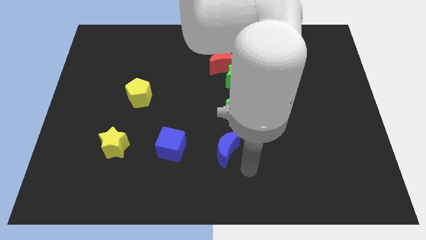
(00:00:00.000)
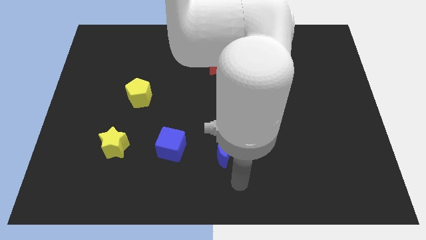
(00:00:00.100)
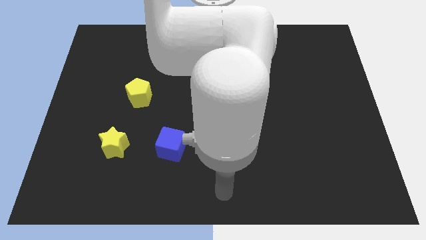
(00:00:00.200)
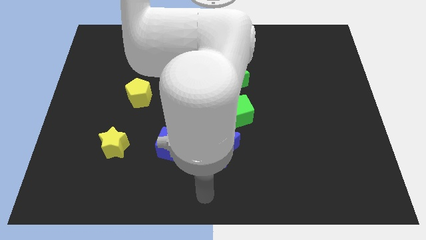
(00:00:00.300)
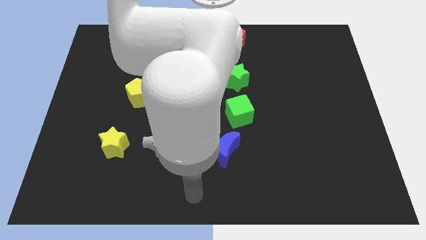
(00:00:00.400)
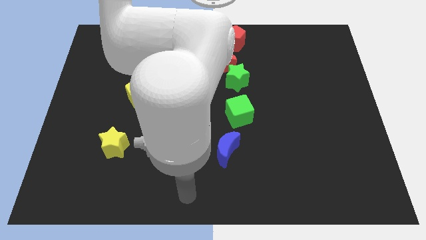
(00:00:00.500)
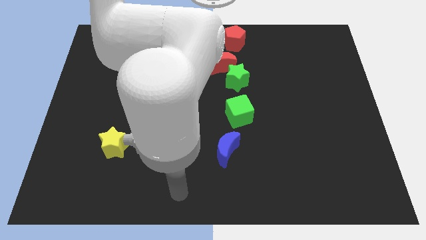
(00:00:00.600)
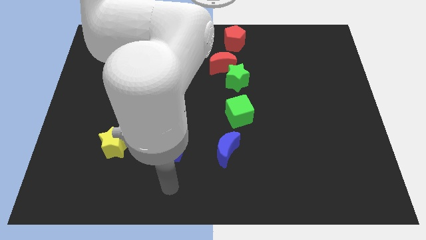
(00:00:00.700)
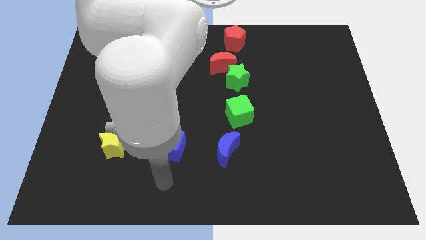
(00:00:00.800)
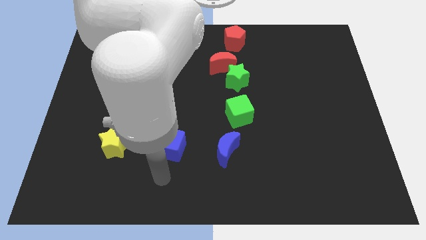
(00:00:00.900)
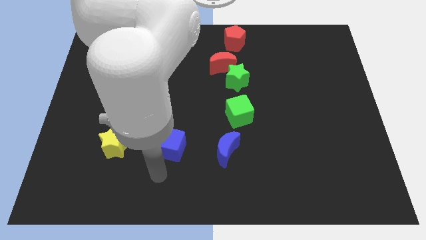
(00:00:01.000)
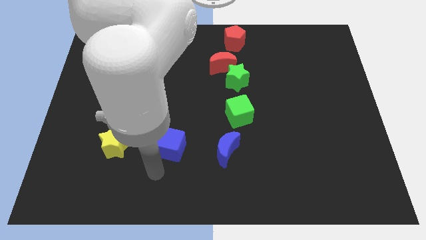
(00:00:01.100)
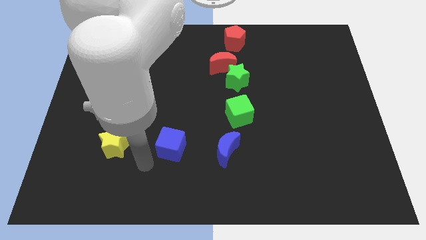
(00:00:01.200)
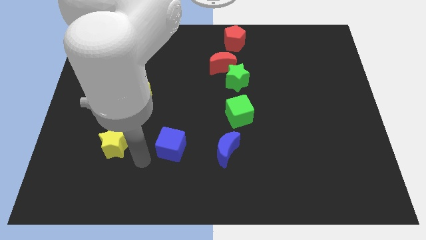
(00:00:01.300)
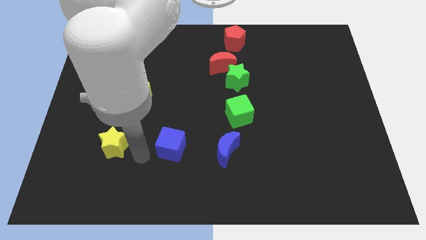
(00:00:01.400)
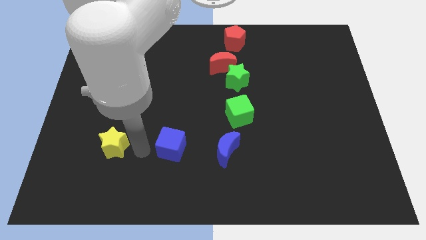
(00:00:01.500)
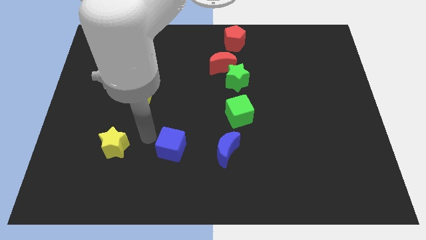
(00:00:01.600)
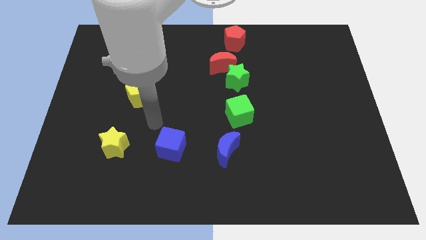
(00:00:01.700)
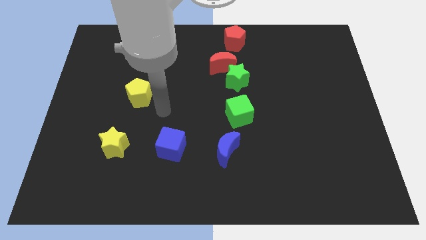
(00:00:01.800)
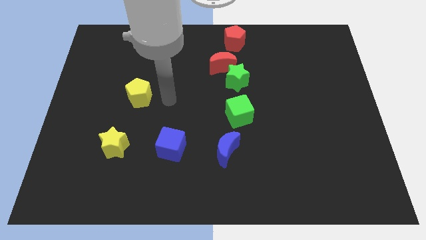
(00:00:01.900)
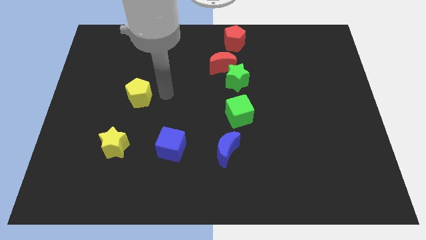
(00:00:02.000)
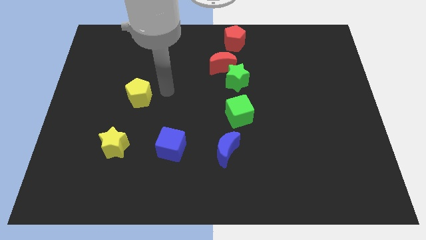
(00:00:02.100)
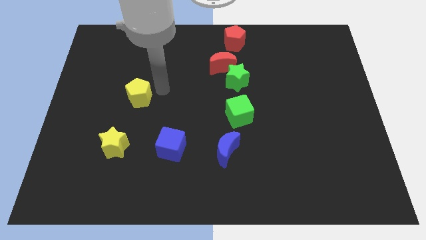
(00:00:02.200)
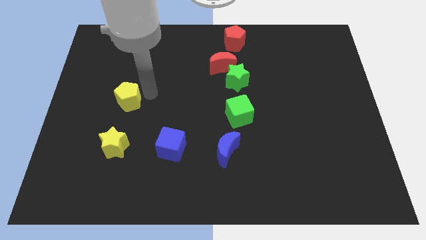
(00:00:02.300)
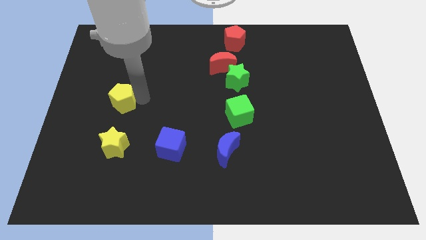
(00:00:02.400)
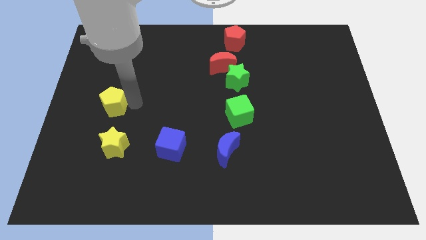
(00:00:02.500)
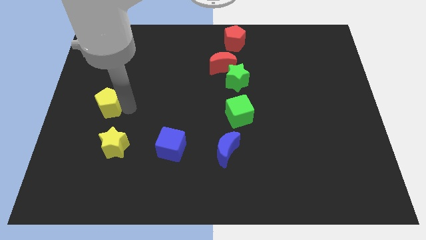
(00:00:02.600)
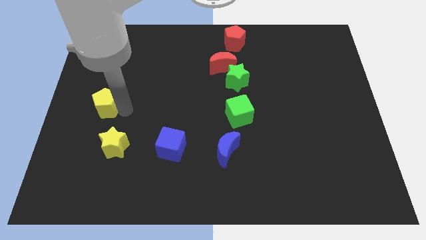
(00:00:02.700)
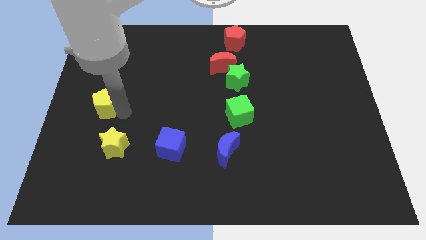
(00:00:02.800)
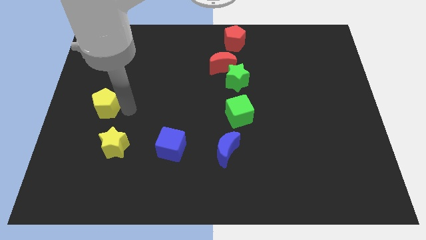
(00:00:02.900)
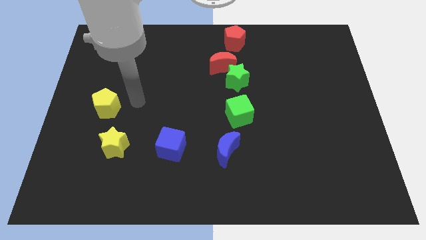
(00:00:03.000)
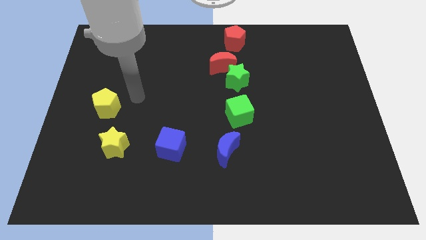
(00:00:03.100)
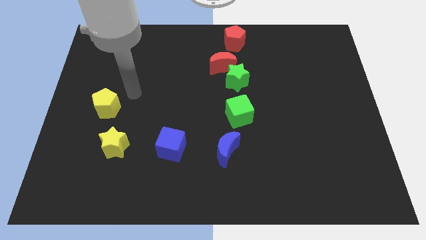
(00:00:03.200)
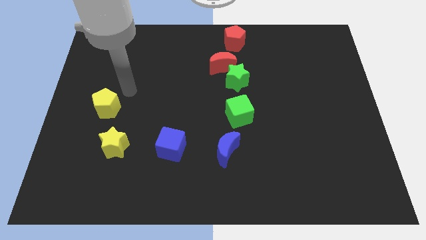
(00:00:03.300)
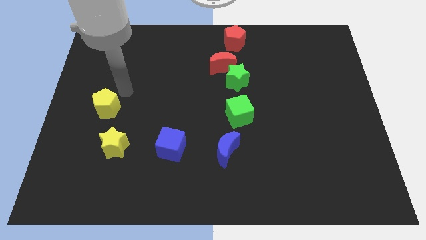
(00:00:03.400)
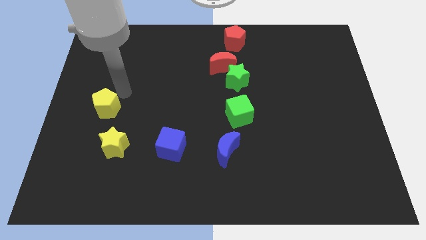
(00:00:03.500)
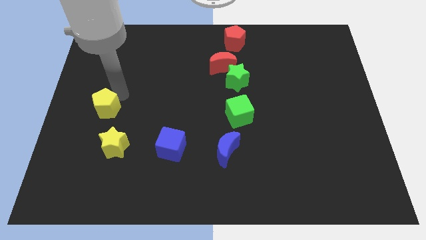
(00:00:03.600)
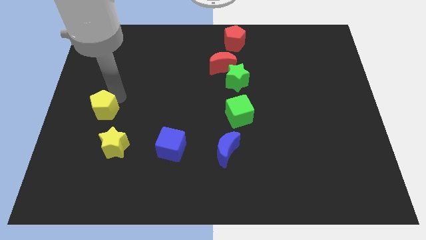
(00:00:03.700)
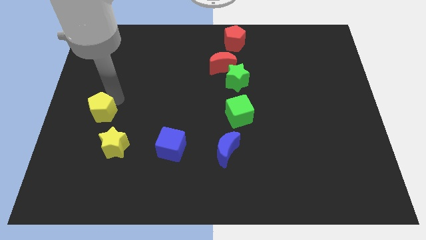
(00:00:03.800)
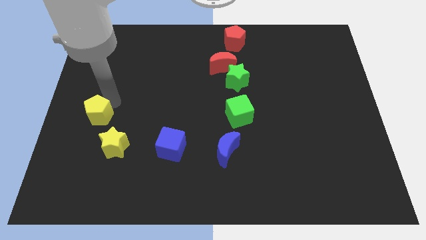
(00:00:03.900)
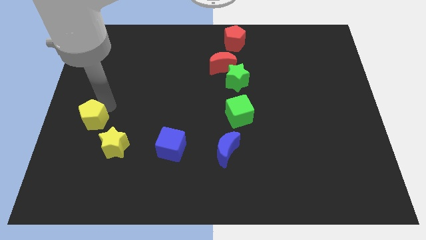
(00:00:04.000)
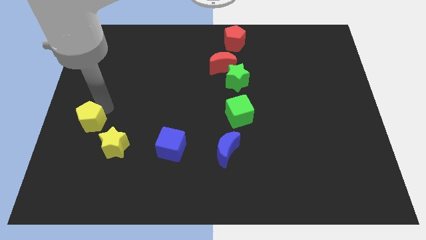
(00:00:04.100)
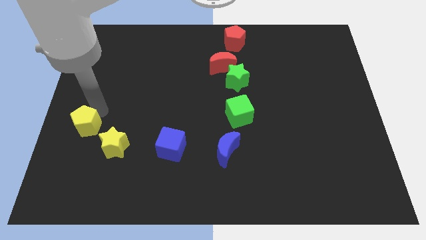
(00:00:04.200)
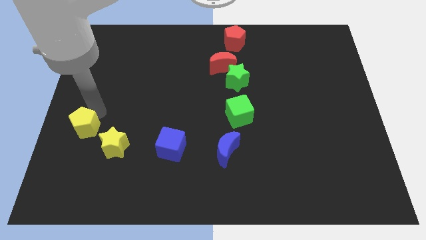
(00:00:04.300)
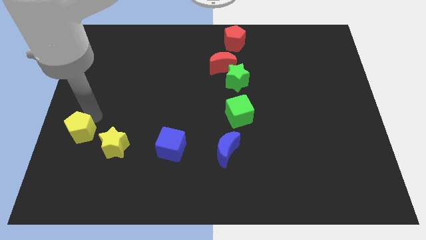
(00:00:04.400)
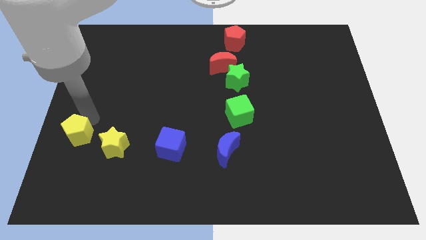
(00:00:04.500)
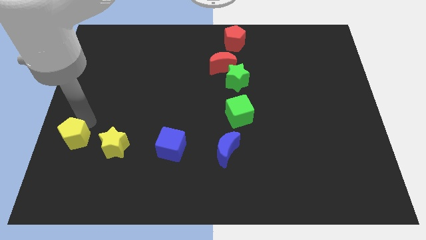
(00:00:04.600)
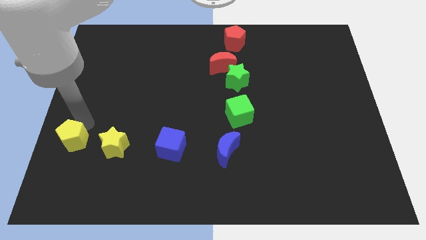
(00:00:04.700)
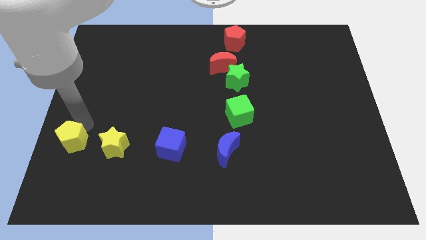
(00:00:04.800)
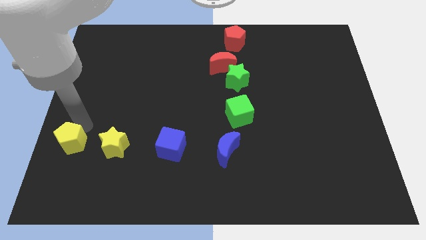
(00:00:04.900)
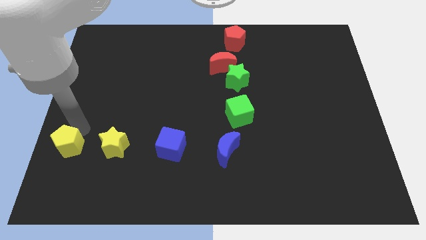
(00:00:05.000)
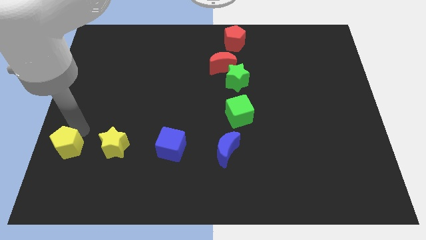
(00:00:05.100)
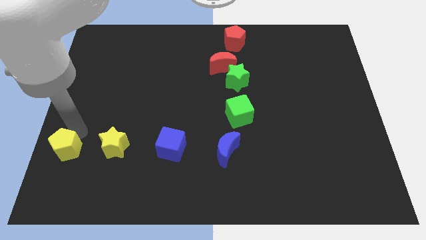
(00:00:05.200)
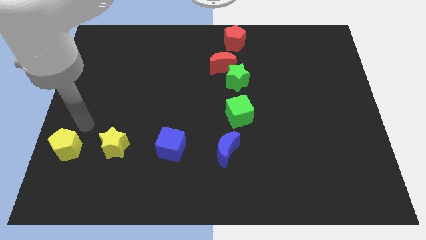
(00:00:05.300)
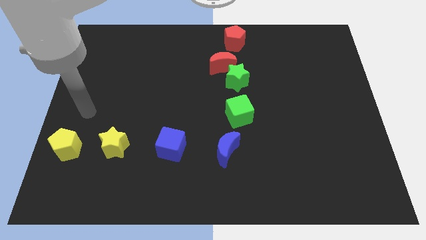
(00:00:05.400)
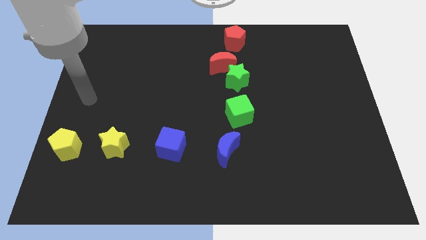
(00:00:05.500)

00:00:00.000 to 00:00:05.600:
push the yellow pentagon to the left side of the yellow star

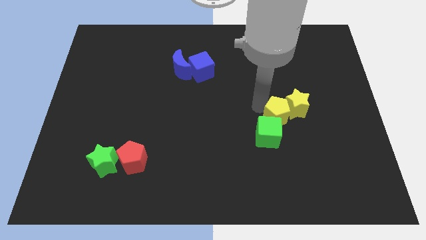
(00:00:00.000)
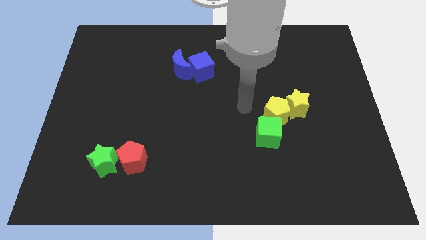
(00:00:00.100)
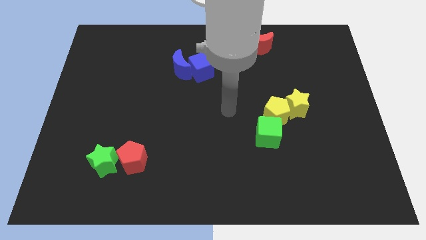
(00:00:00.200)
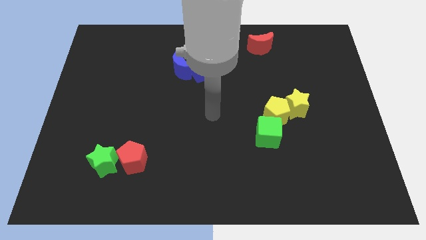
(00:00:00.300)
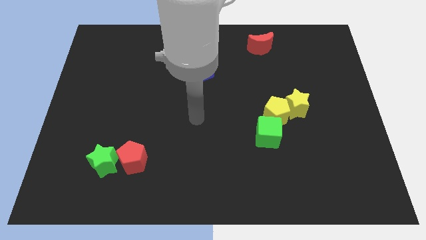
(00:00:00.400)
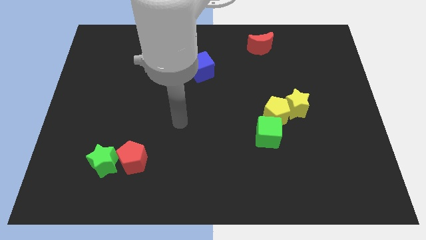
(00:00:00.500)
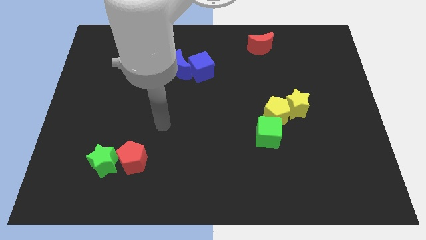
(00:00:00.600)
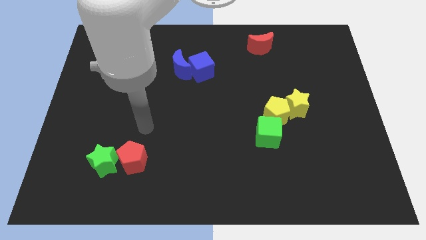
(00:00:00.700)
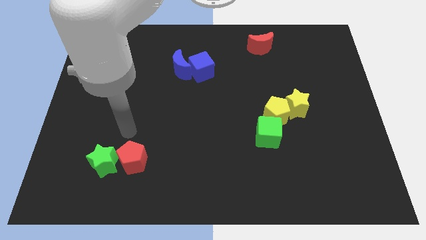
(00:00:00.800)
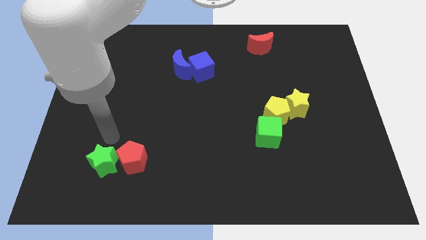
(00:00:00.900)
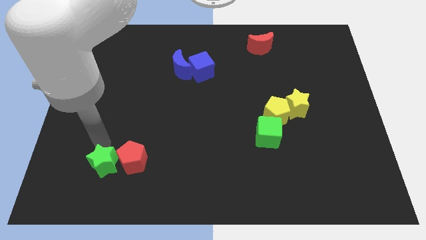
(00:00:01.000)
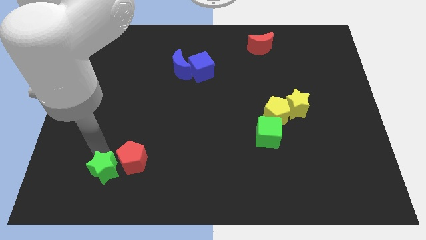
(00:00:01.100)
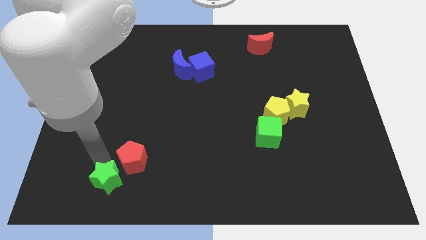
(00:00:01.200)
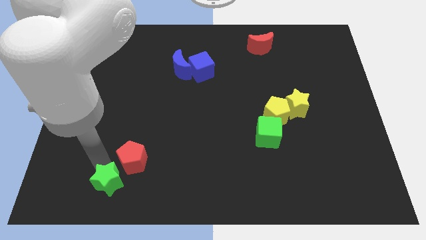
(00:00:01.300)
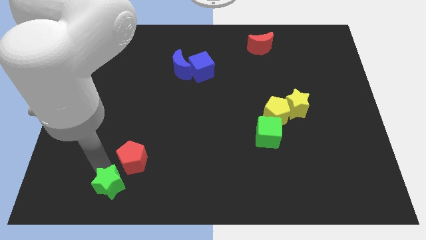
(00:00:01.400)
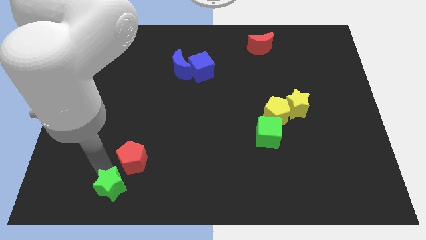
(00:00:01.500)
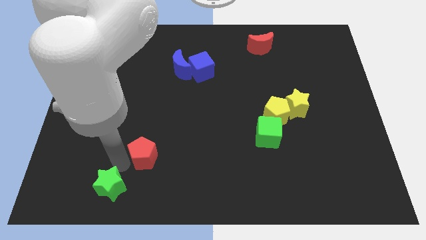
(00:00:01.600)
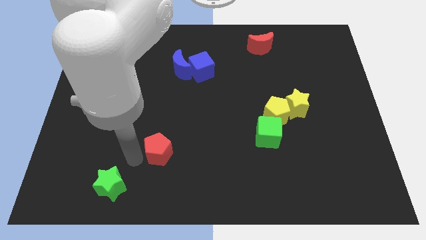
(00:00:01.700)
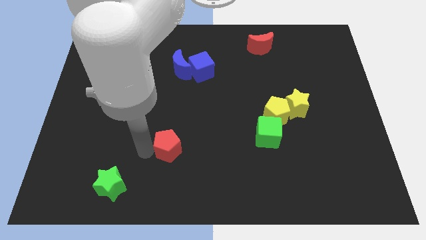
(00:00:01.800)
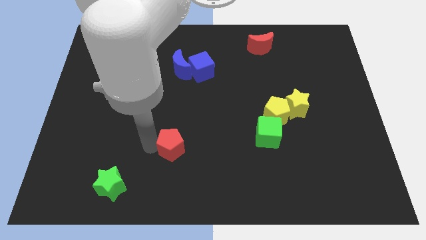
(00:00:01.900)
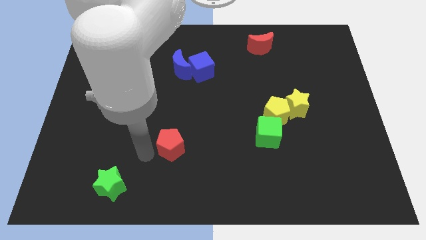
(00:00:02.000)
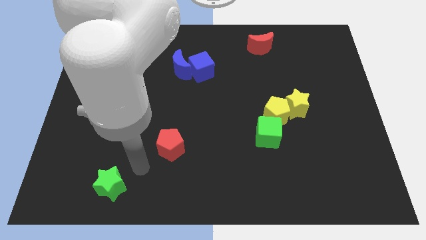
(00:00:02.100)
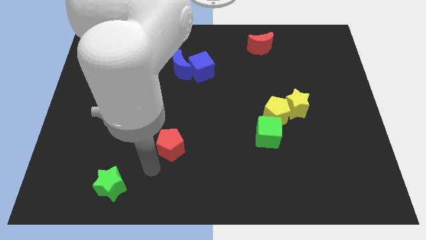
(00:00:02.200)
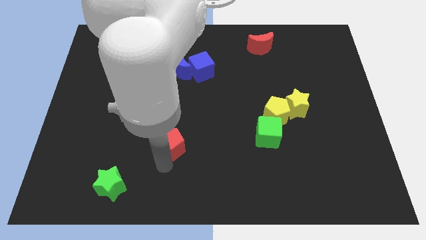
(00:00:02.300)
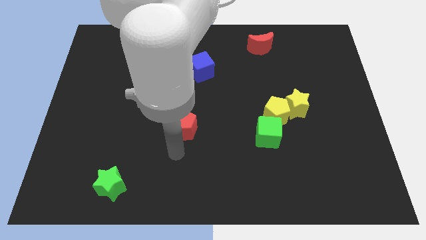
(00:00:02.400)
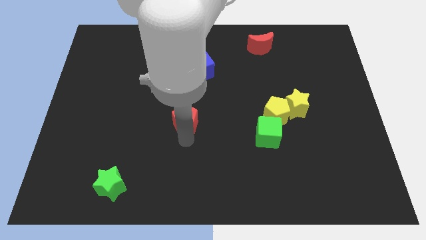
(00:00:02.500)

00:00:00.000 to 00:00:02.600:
separate the red pentagon from the green star

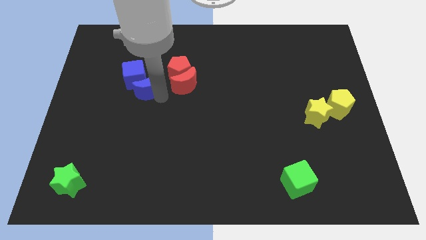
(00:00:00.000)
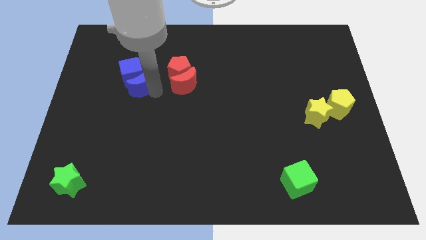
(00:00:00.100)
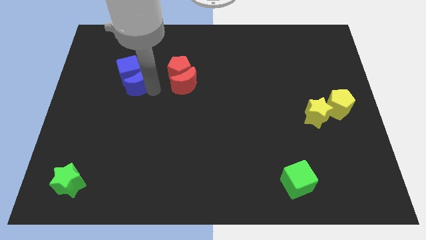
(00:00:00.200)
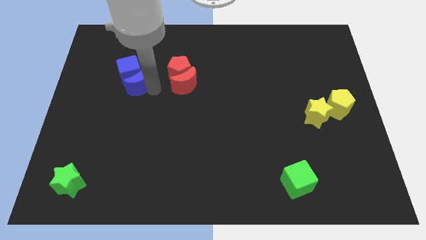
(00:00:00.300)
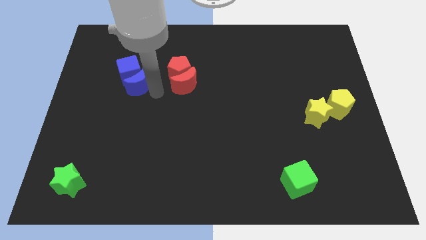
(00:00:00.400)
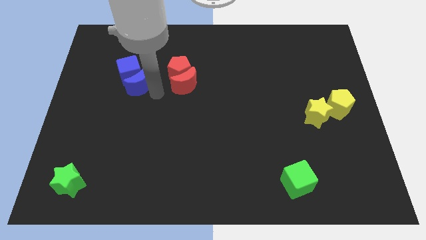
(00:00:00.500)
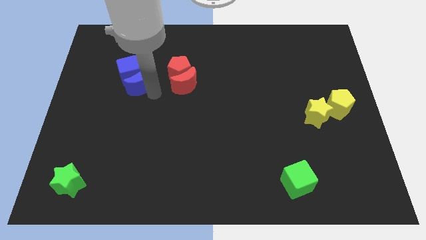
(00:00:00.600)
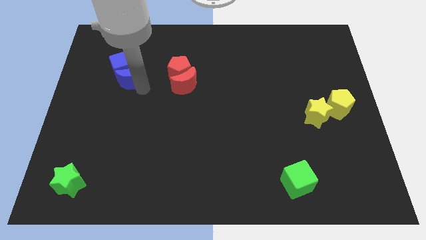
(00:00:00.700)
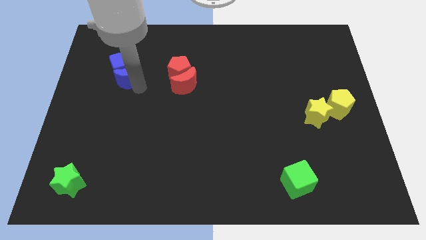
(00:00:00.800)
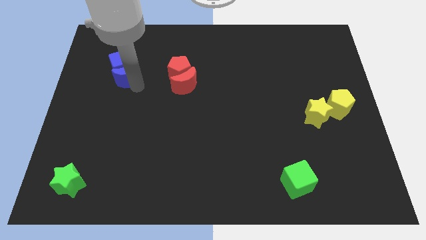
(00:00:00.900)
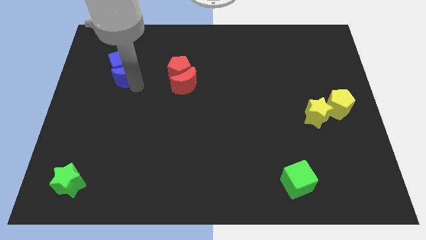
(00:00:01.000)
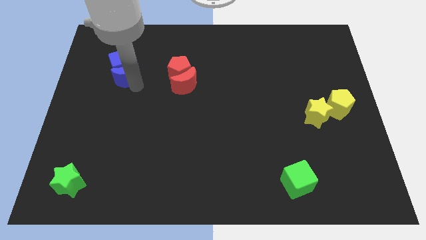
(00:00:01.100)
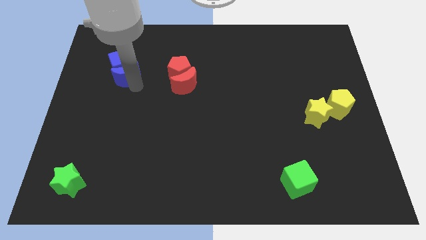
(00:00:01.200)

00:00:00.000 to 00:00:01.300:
push the blue crescent into the blue cube
